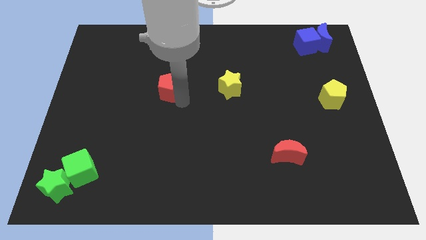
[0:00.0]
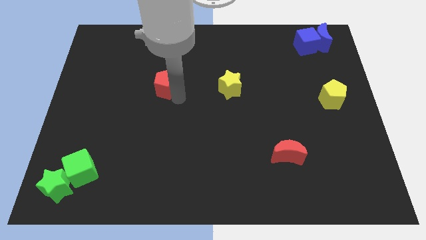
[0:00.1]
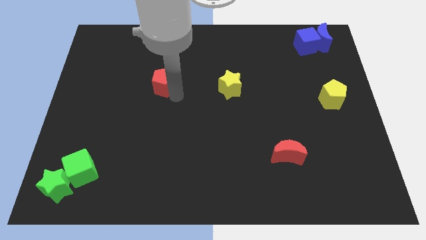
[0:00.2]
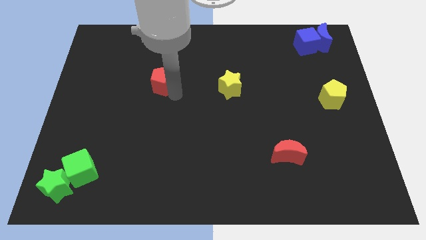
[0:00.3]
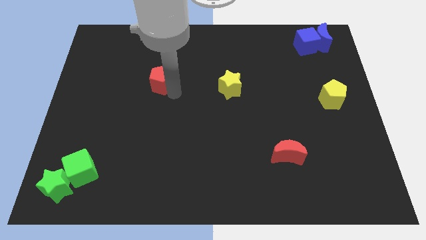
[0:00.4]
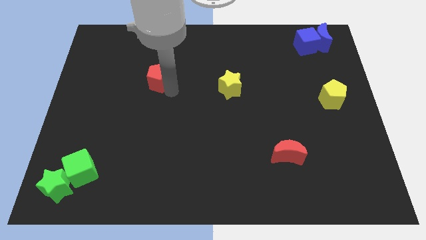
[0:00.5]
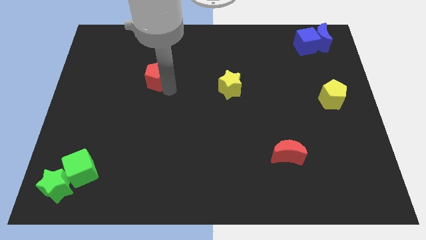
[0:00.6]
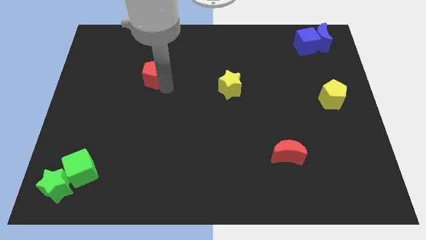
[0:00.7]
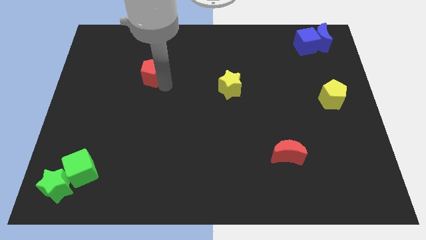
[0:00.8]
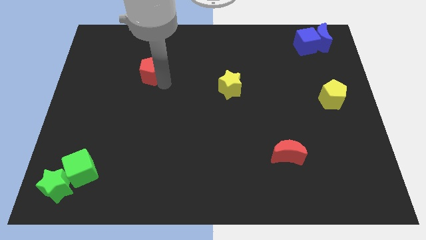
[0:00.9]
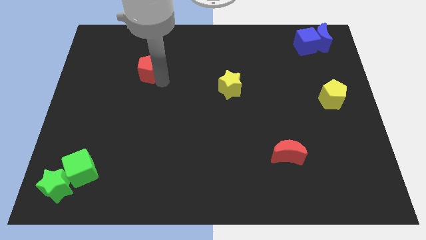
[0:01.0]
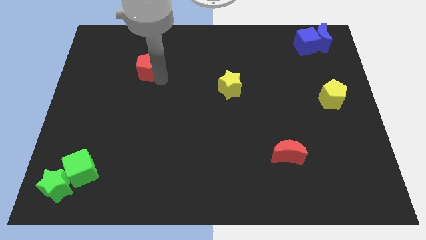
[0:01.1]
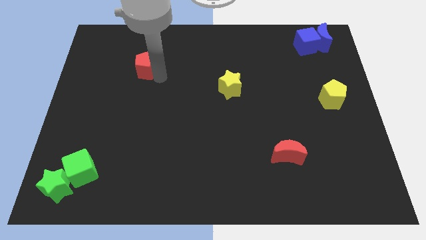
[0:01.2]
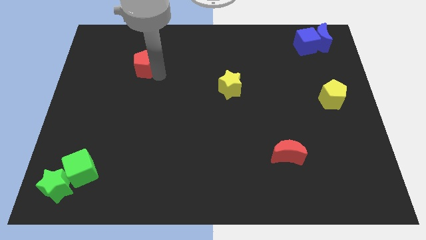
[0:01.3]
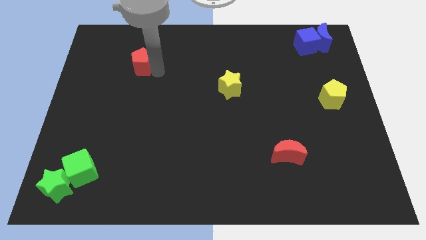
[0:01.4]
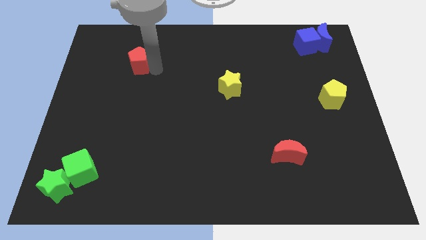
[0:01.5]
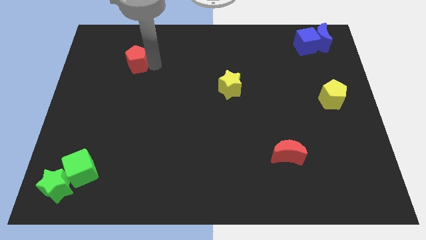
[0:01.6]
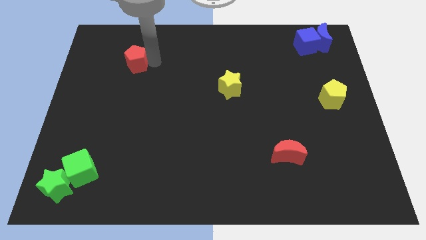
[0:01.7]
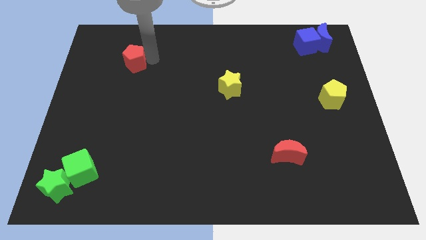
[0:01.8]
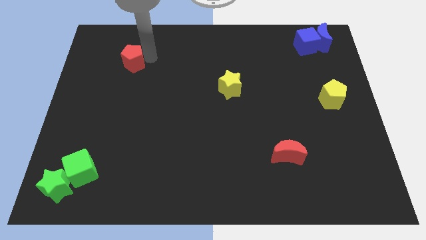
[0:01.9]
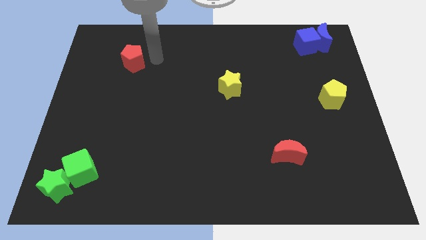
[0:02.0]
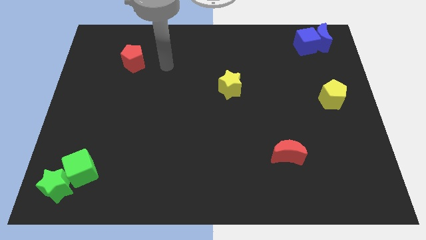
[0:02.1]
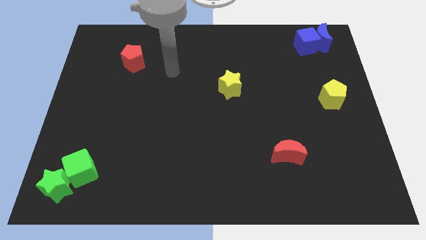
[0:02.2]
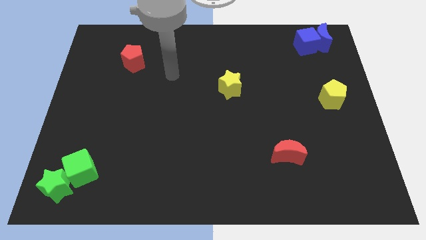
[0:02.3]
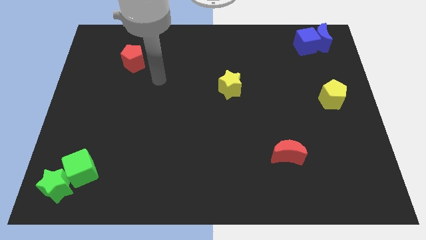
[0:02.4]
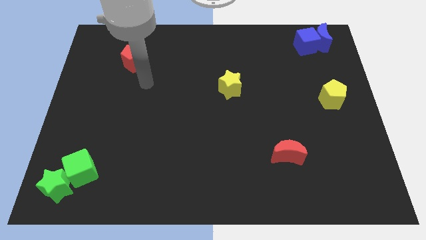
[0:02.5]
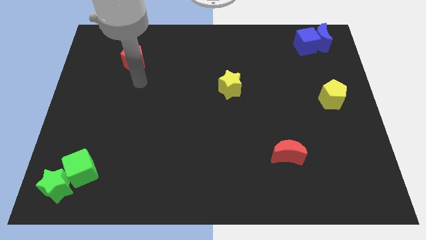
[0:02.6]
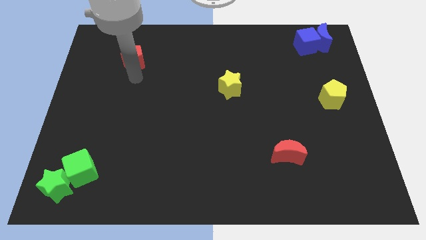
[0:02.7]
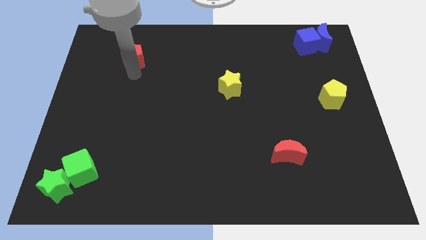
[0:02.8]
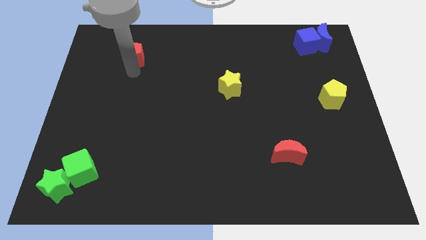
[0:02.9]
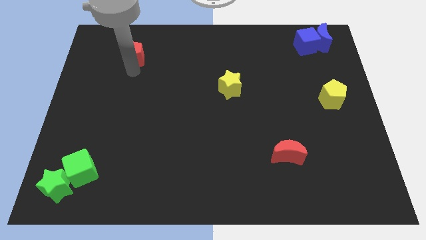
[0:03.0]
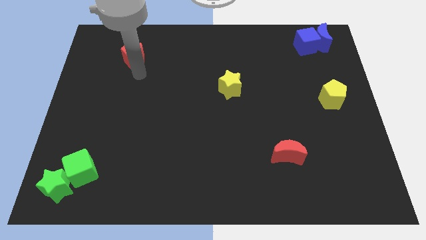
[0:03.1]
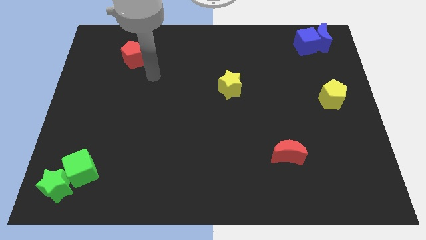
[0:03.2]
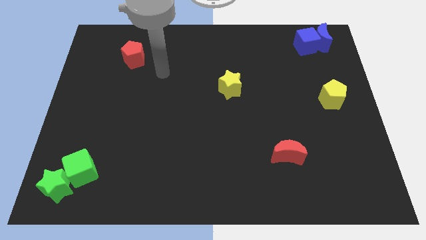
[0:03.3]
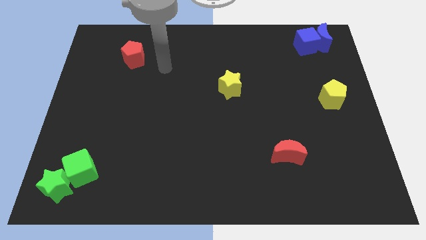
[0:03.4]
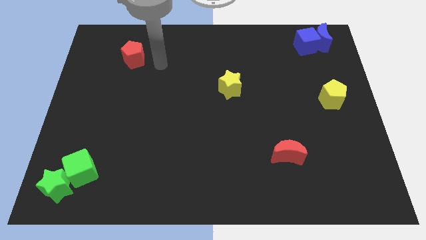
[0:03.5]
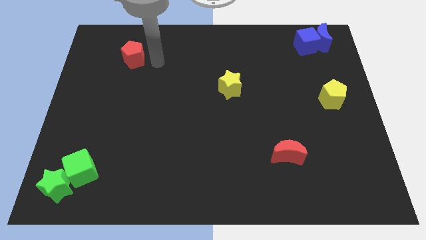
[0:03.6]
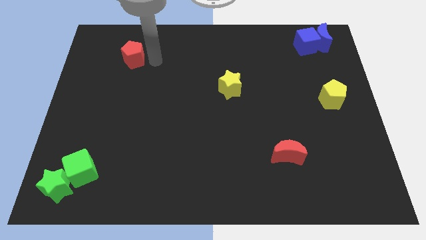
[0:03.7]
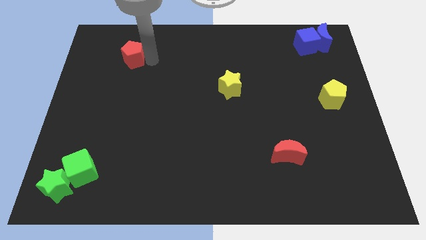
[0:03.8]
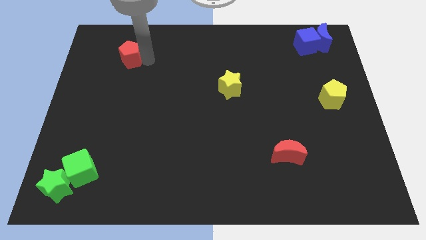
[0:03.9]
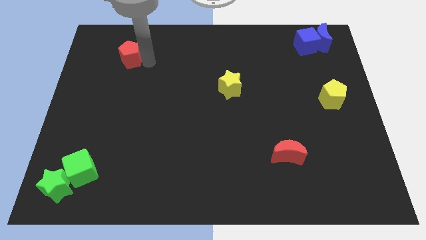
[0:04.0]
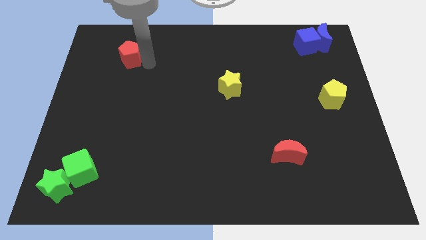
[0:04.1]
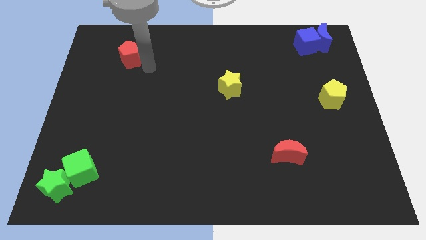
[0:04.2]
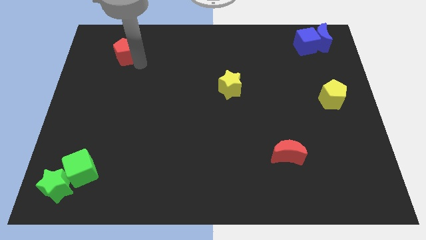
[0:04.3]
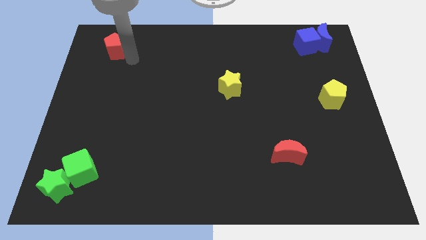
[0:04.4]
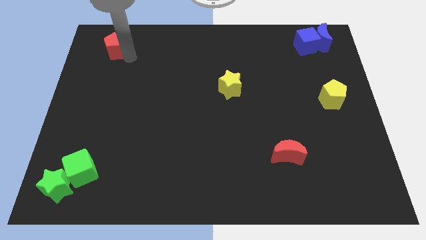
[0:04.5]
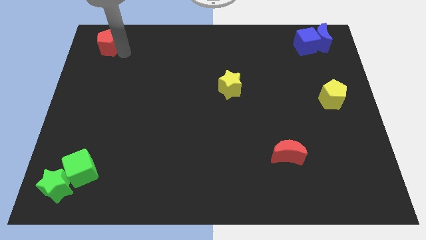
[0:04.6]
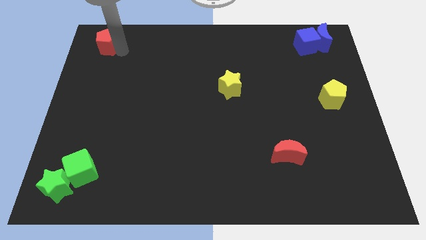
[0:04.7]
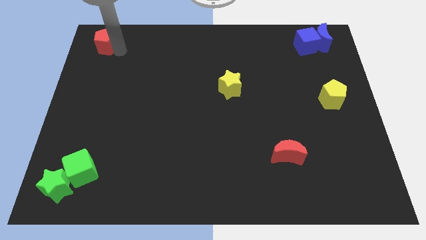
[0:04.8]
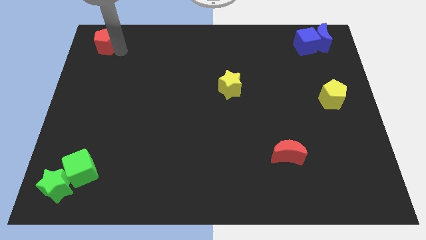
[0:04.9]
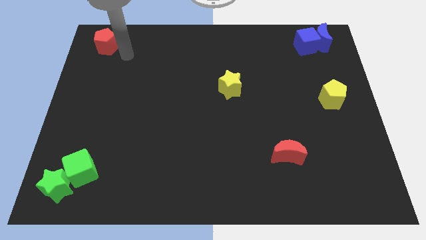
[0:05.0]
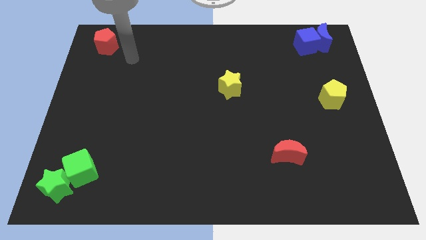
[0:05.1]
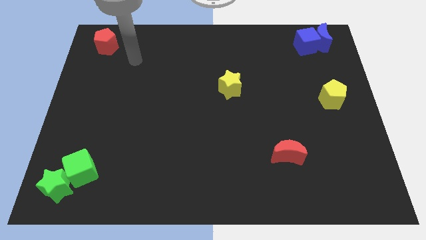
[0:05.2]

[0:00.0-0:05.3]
place the red pentagon to the top left corner of the board

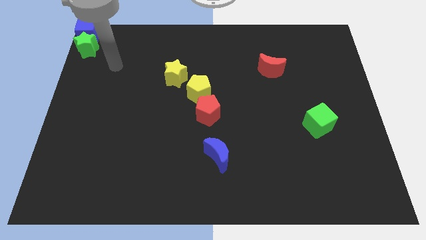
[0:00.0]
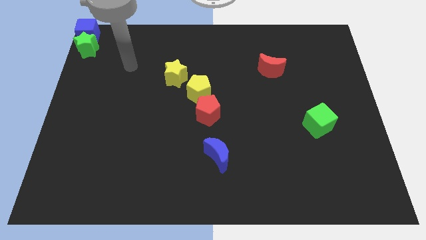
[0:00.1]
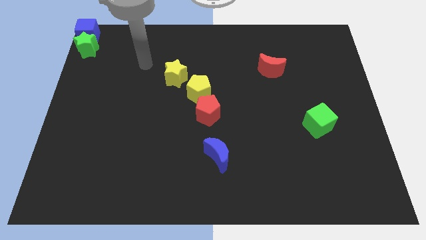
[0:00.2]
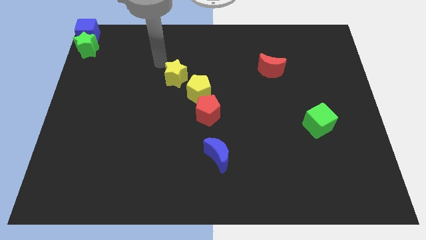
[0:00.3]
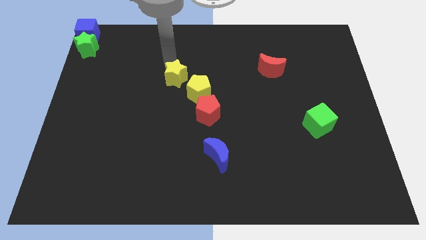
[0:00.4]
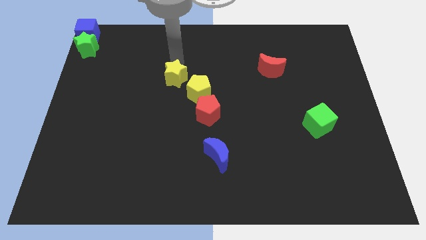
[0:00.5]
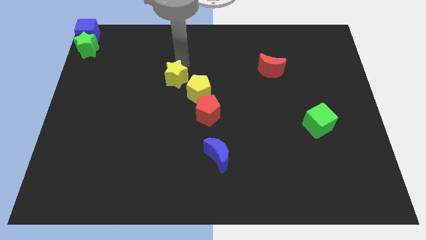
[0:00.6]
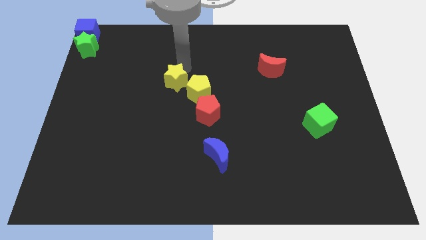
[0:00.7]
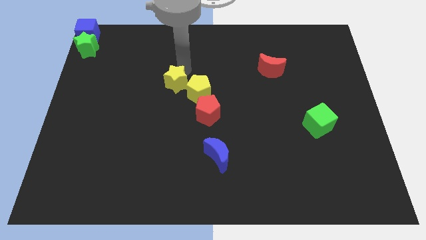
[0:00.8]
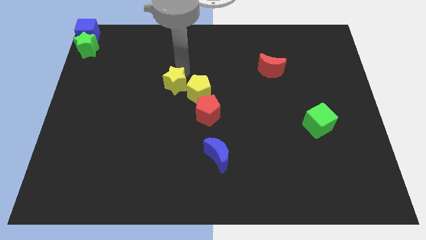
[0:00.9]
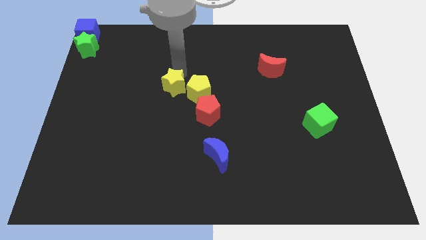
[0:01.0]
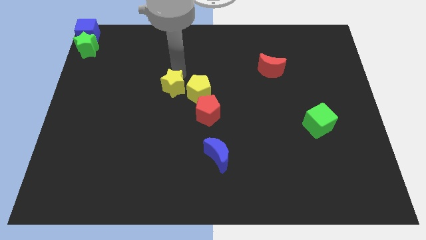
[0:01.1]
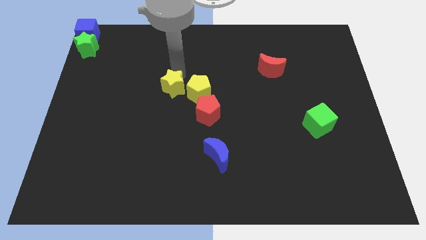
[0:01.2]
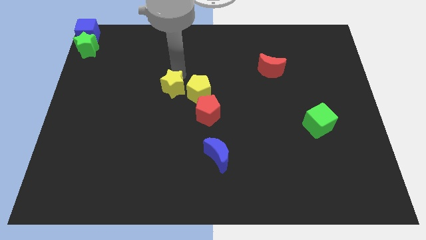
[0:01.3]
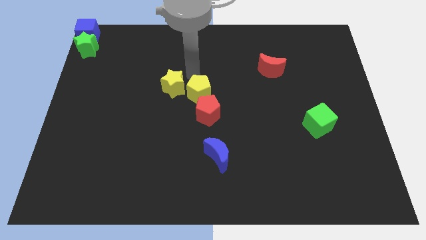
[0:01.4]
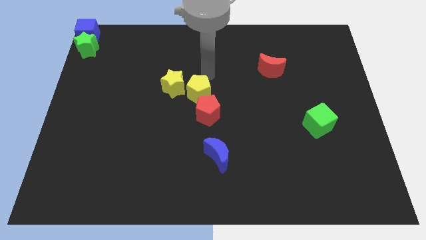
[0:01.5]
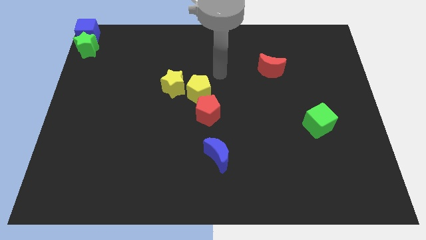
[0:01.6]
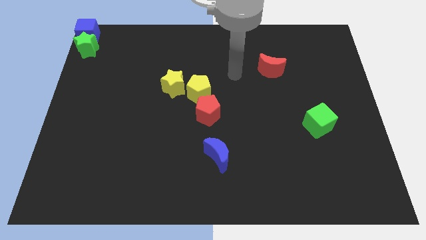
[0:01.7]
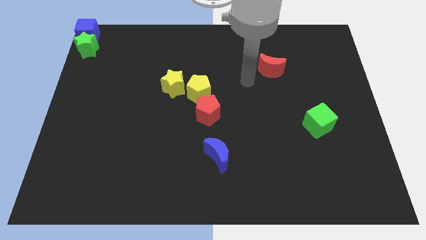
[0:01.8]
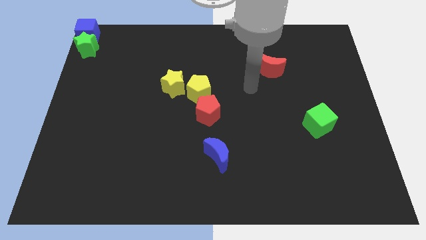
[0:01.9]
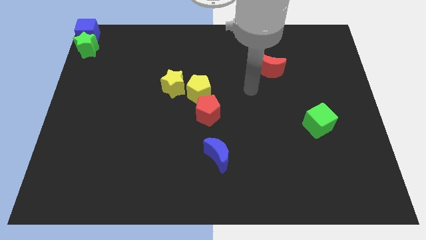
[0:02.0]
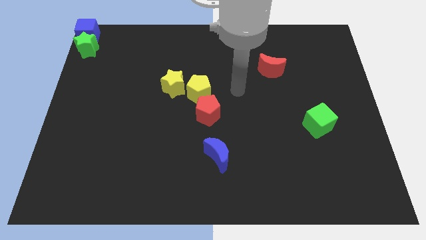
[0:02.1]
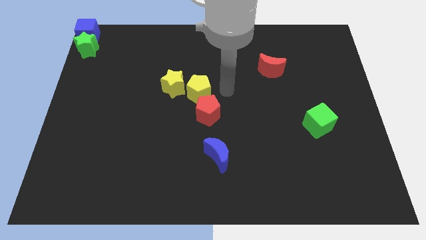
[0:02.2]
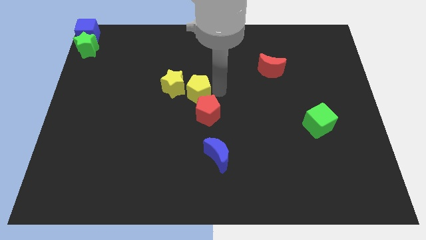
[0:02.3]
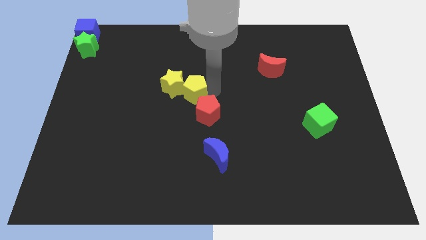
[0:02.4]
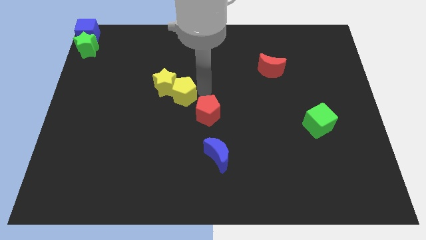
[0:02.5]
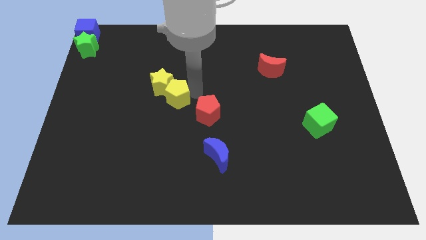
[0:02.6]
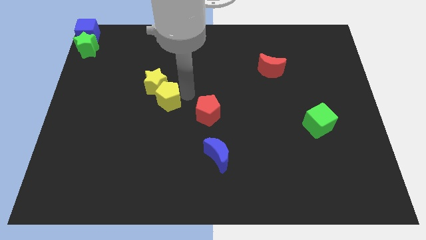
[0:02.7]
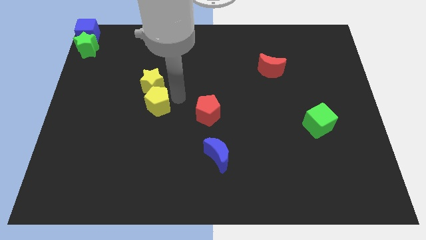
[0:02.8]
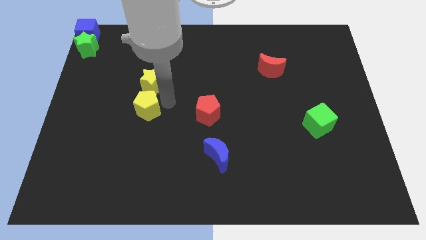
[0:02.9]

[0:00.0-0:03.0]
move the yellow blocks to the center left

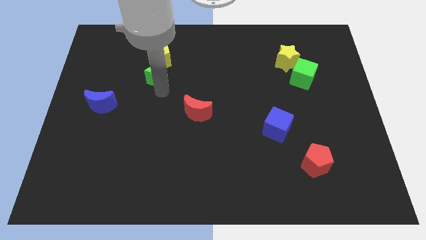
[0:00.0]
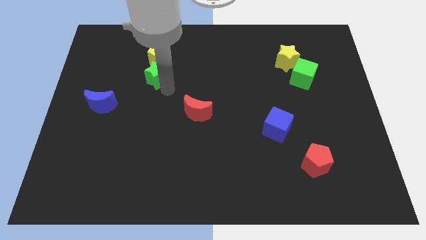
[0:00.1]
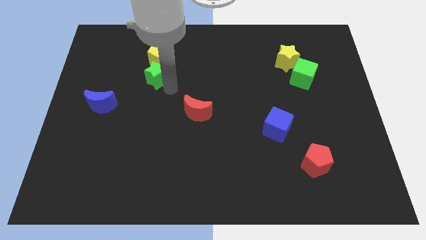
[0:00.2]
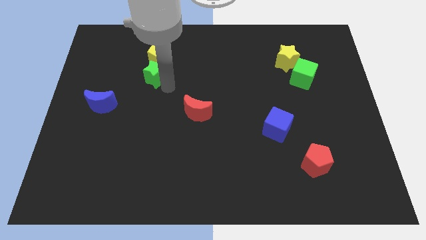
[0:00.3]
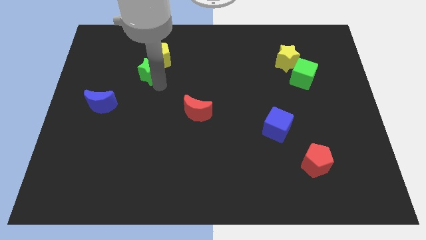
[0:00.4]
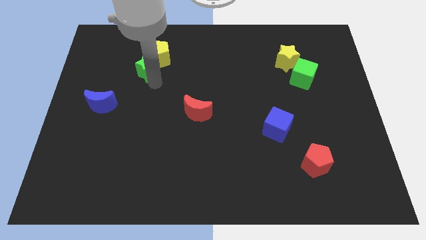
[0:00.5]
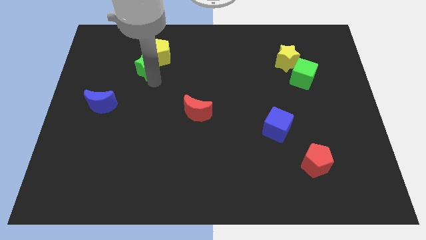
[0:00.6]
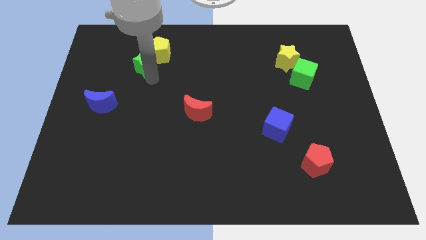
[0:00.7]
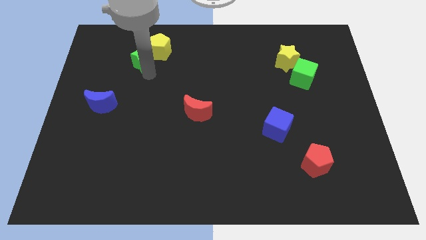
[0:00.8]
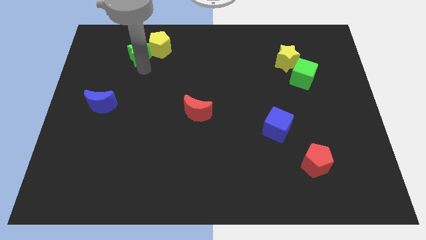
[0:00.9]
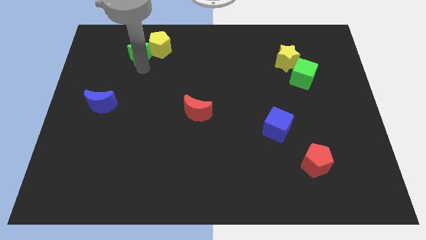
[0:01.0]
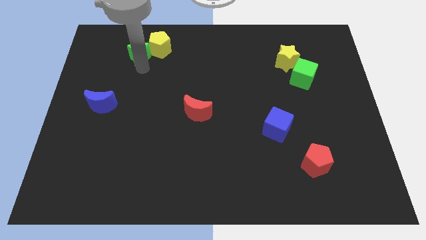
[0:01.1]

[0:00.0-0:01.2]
place the green star beside the yellow pentagon
